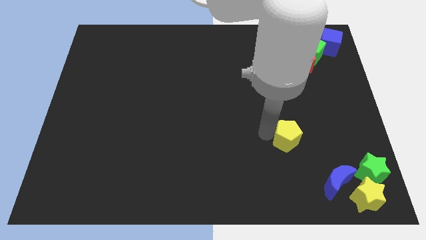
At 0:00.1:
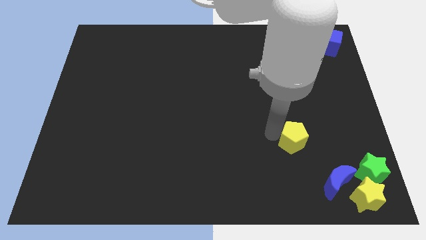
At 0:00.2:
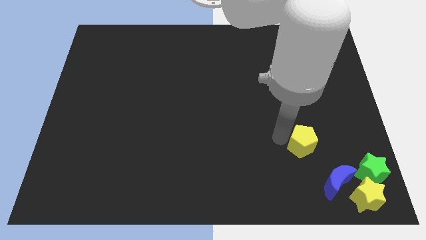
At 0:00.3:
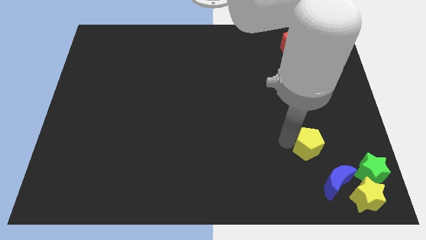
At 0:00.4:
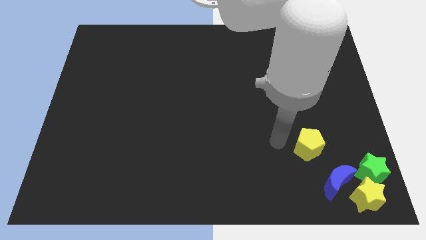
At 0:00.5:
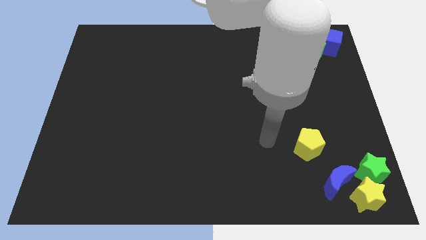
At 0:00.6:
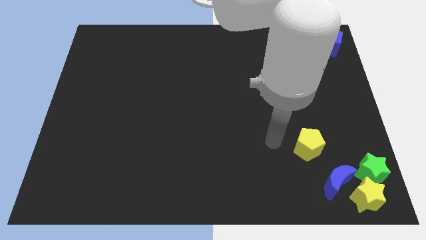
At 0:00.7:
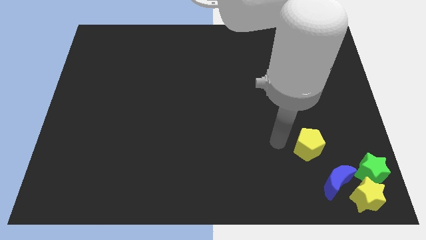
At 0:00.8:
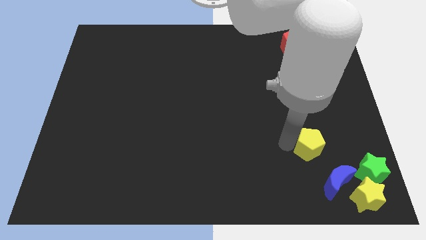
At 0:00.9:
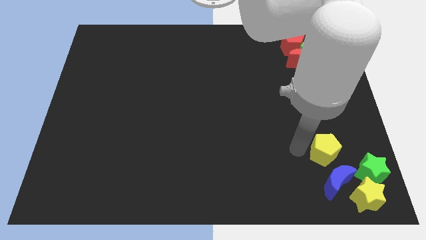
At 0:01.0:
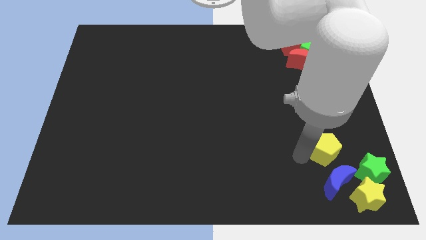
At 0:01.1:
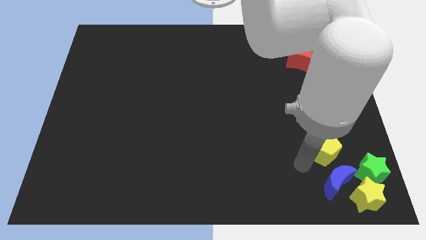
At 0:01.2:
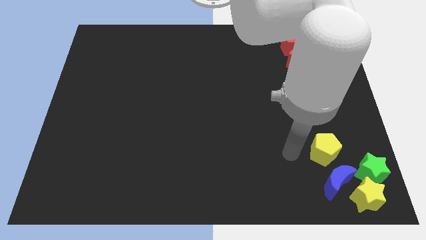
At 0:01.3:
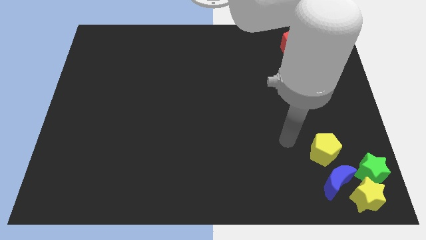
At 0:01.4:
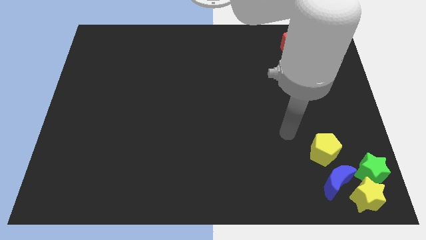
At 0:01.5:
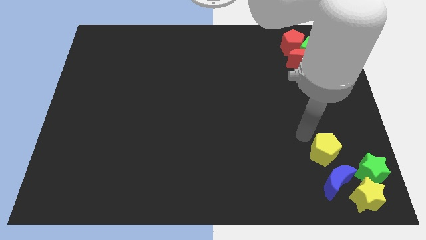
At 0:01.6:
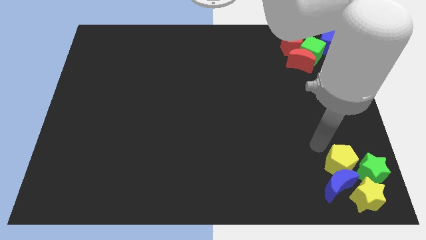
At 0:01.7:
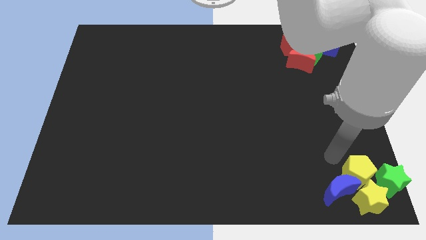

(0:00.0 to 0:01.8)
place the yellow pentagon to the left of the green star

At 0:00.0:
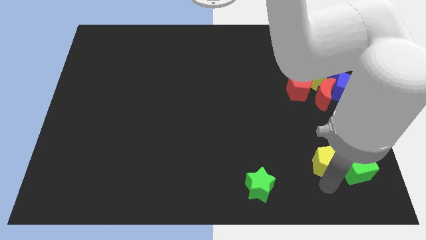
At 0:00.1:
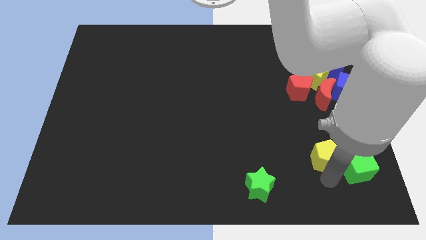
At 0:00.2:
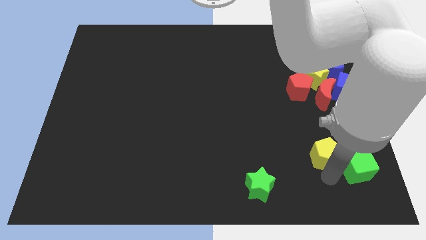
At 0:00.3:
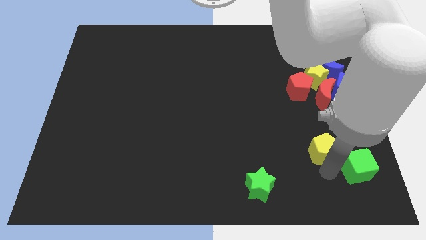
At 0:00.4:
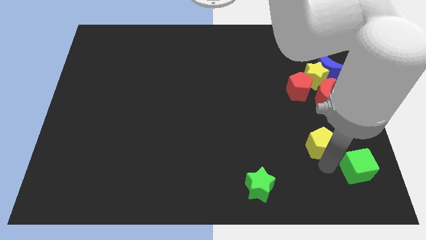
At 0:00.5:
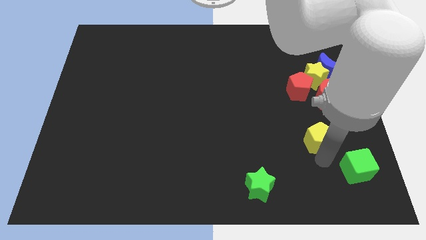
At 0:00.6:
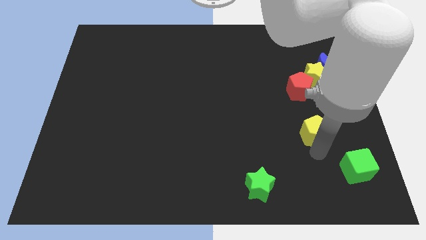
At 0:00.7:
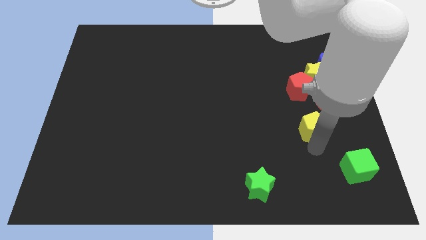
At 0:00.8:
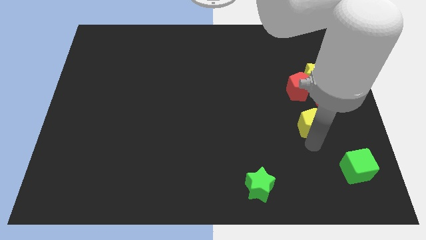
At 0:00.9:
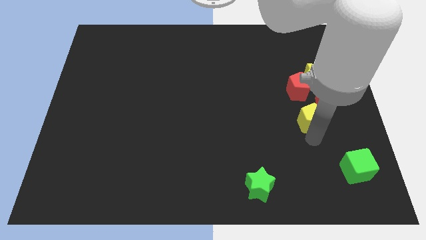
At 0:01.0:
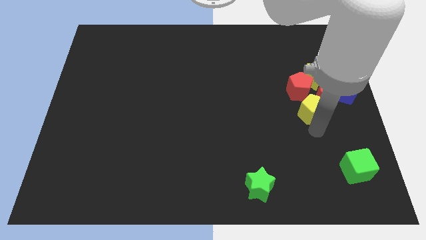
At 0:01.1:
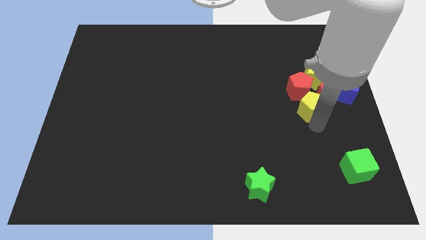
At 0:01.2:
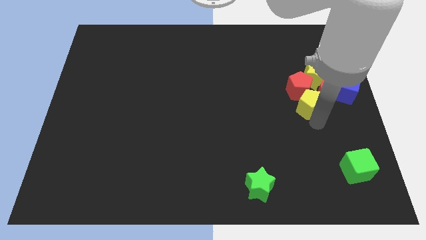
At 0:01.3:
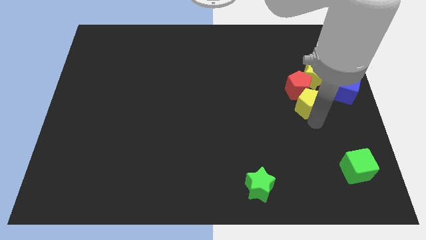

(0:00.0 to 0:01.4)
push yellow pentagon towards the red pentagon

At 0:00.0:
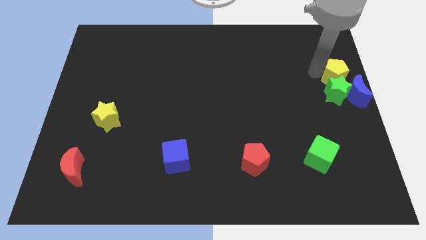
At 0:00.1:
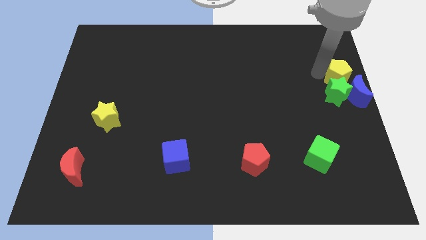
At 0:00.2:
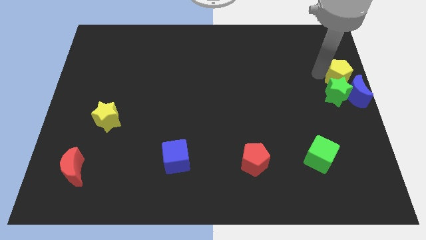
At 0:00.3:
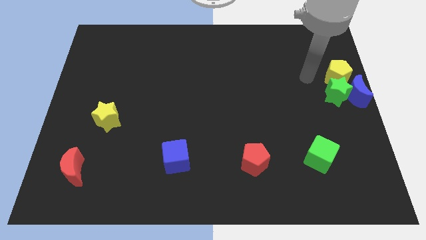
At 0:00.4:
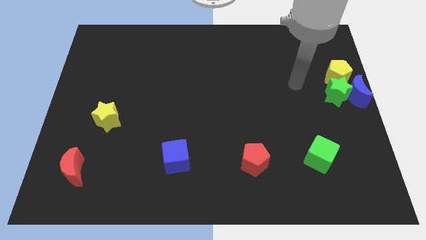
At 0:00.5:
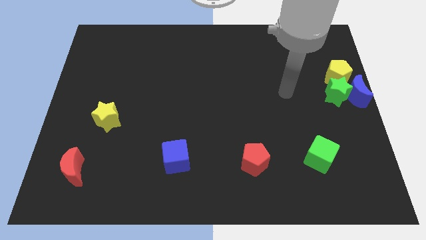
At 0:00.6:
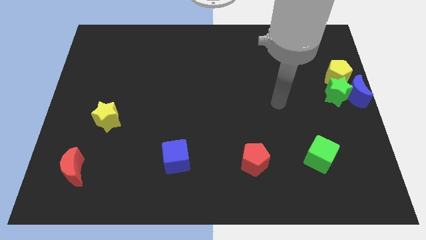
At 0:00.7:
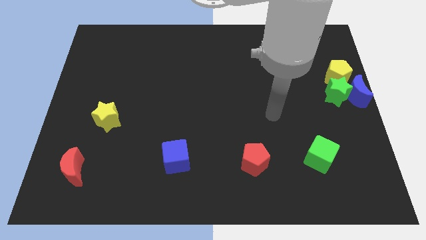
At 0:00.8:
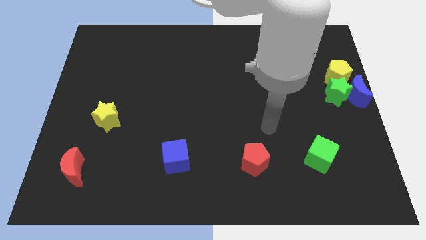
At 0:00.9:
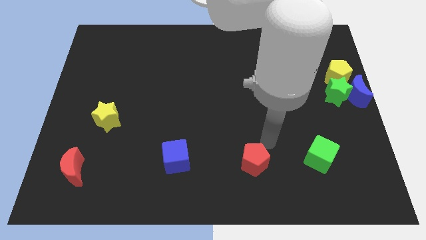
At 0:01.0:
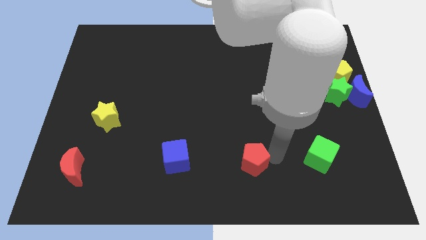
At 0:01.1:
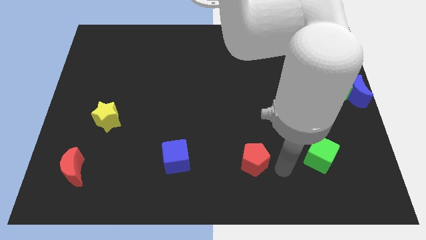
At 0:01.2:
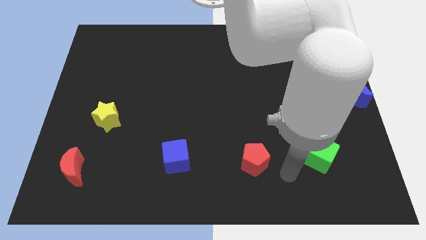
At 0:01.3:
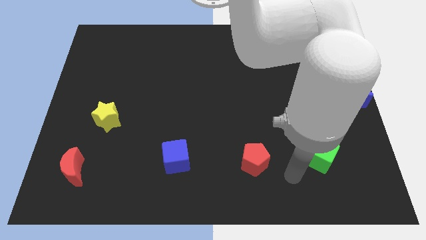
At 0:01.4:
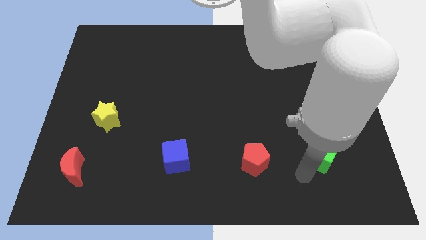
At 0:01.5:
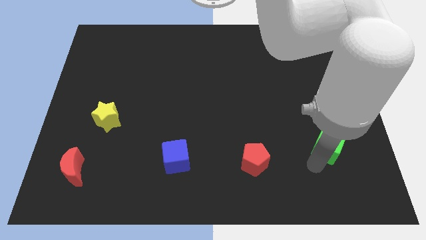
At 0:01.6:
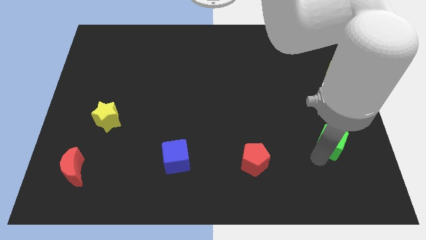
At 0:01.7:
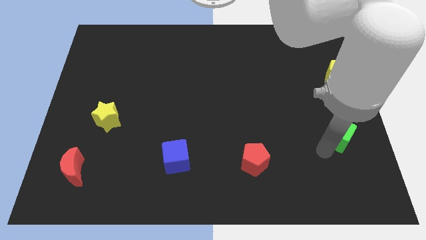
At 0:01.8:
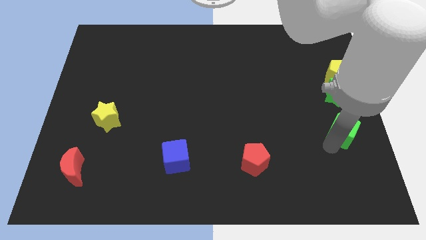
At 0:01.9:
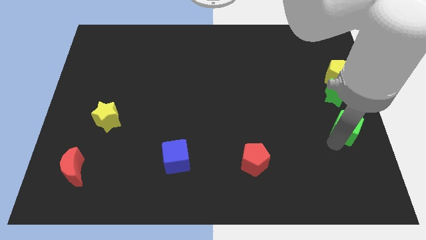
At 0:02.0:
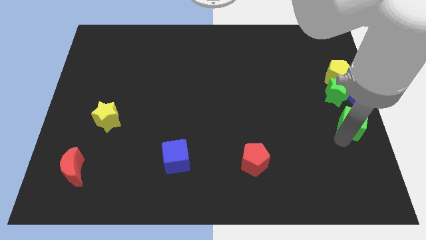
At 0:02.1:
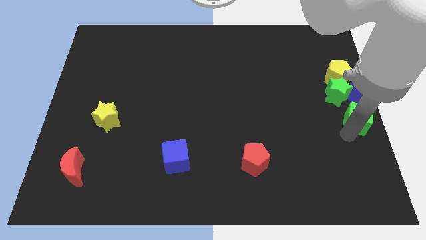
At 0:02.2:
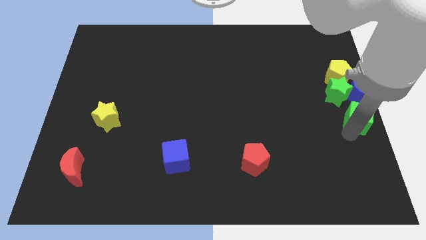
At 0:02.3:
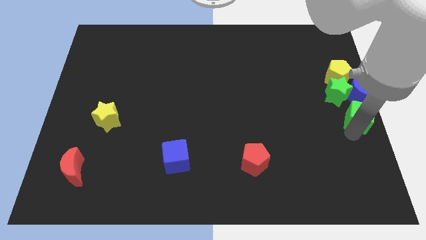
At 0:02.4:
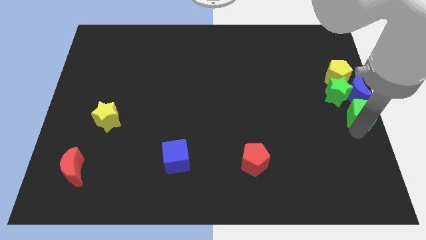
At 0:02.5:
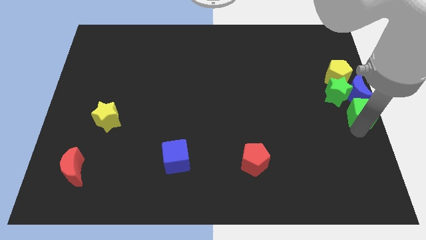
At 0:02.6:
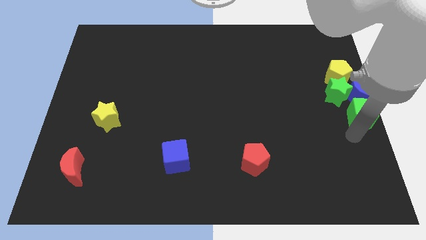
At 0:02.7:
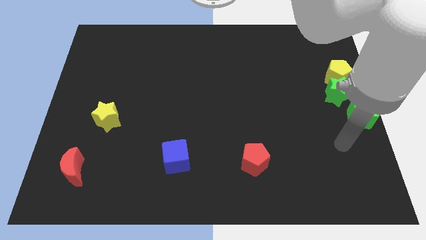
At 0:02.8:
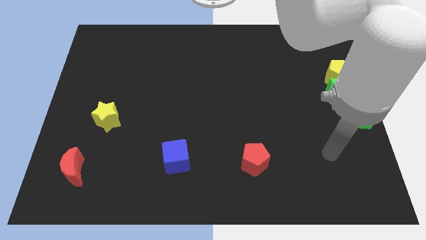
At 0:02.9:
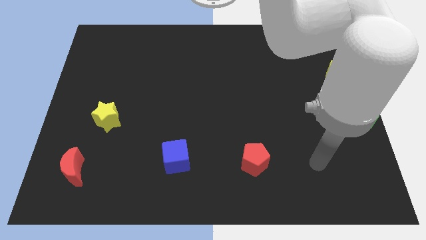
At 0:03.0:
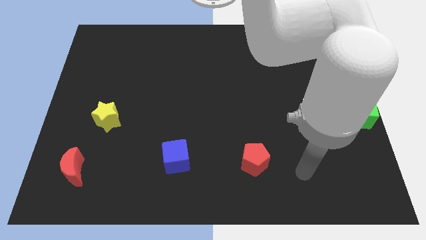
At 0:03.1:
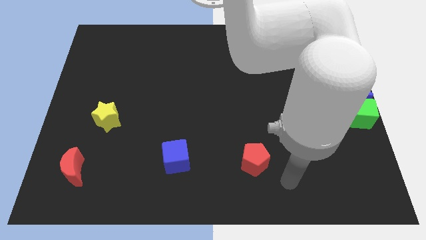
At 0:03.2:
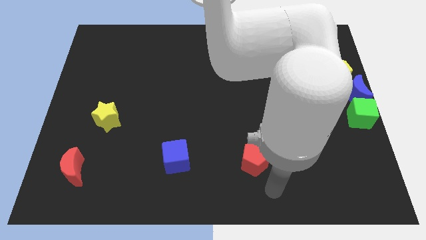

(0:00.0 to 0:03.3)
move the green cube to the bottom side of the blue moon

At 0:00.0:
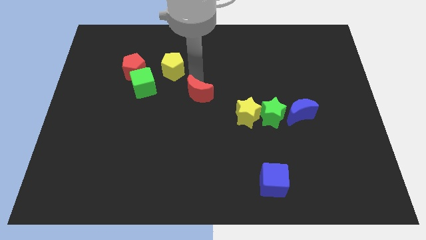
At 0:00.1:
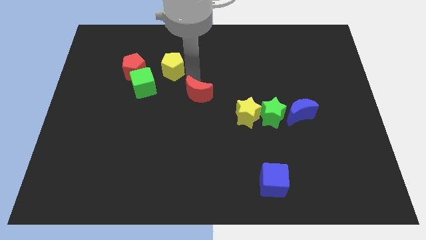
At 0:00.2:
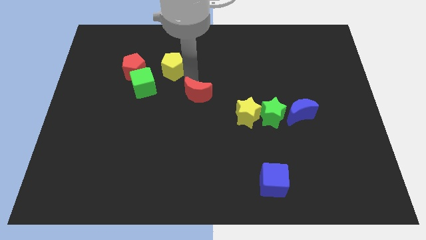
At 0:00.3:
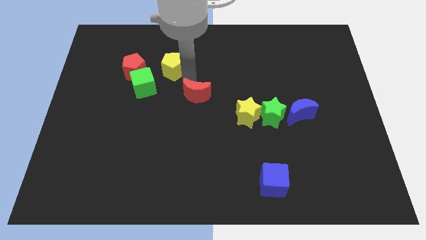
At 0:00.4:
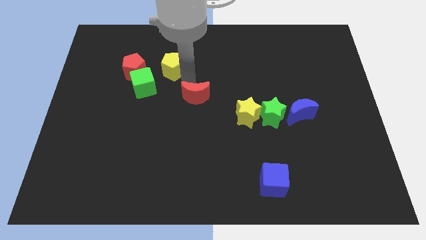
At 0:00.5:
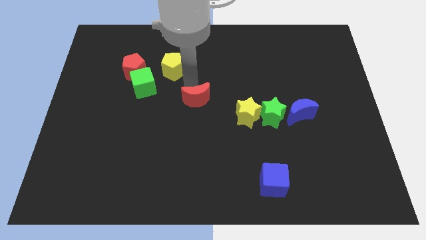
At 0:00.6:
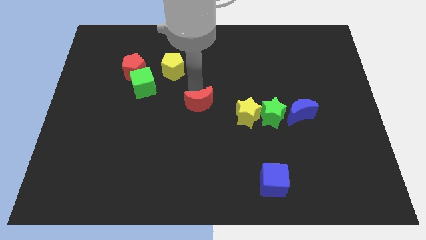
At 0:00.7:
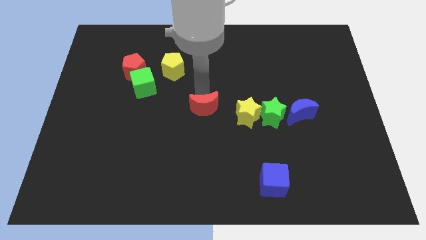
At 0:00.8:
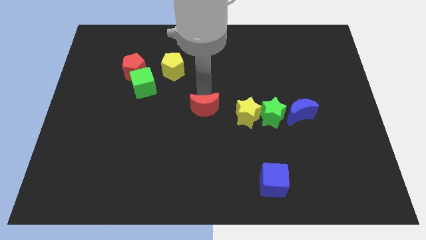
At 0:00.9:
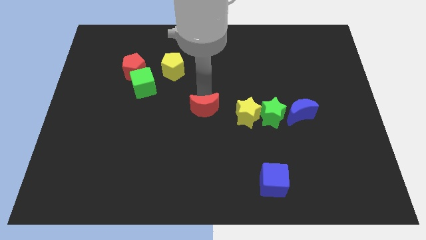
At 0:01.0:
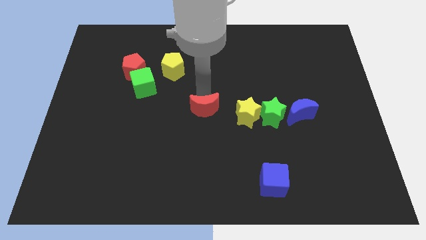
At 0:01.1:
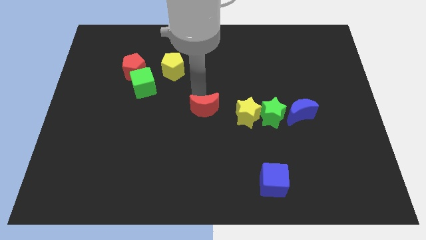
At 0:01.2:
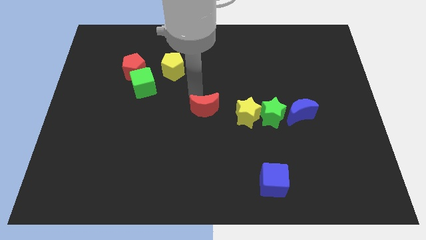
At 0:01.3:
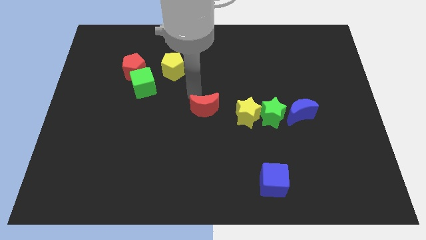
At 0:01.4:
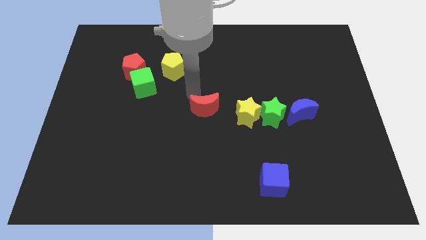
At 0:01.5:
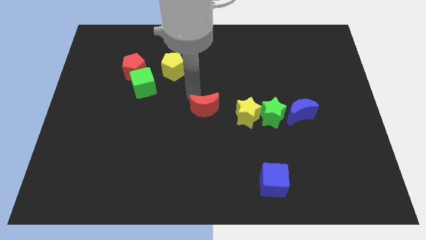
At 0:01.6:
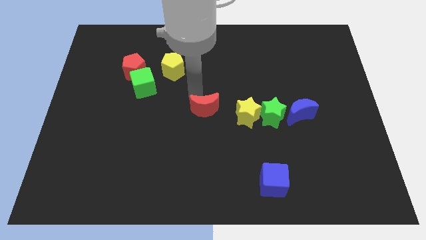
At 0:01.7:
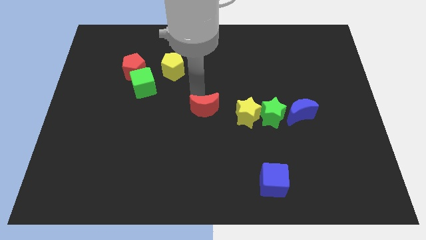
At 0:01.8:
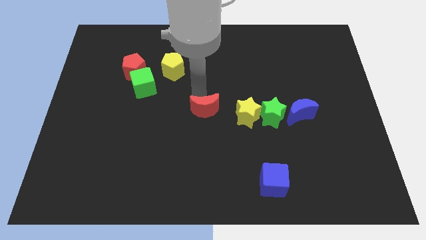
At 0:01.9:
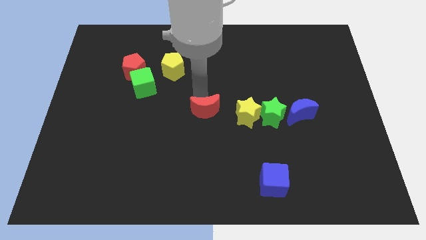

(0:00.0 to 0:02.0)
push the red crescent towards the bottom

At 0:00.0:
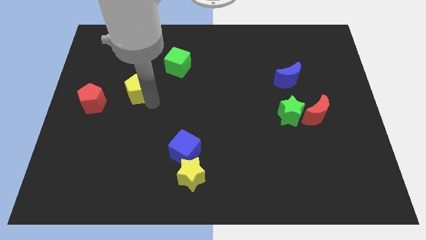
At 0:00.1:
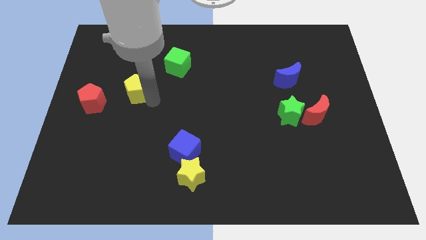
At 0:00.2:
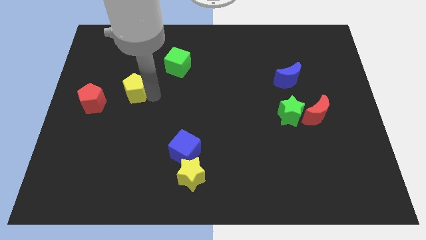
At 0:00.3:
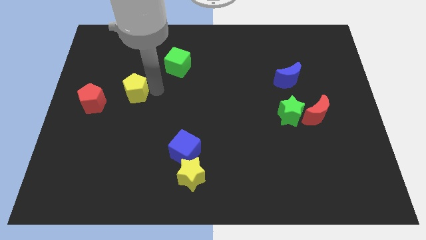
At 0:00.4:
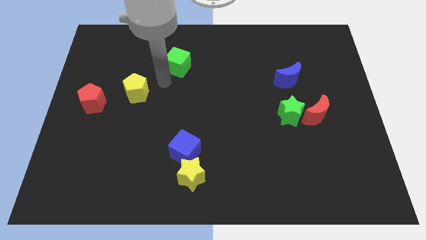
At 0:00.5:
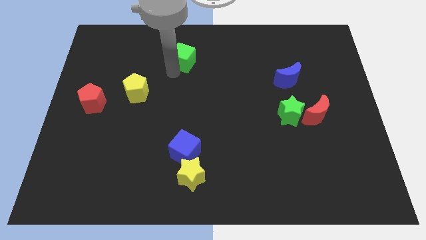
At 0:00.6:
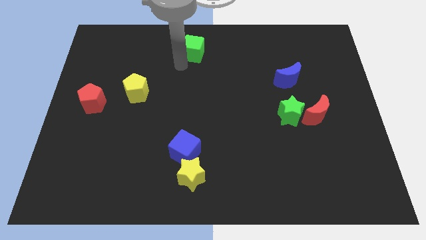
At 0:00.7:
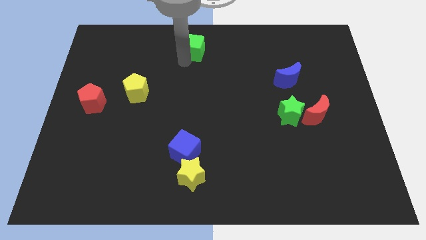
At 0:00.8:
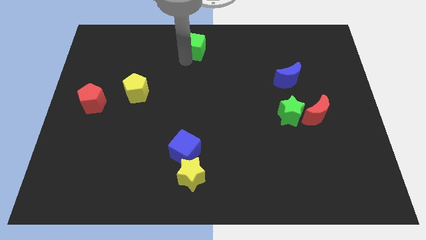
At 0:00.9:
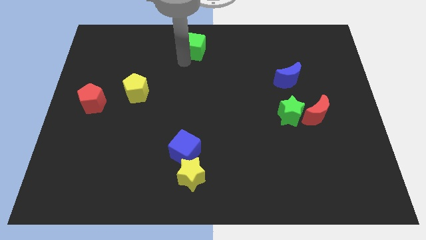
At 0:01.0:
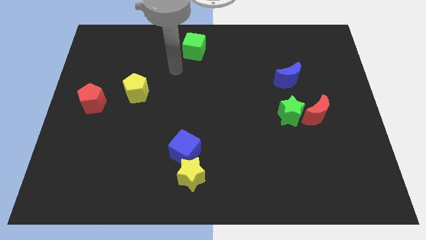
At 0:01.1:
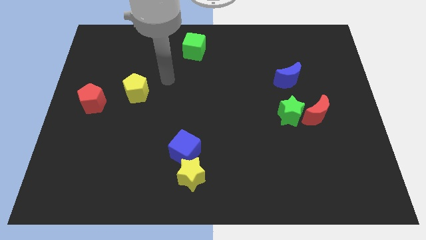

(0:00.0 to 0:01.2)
move the green cube to the top center
